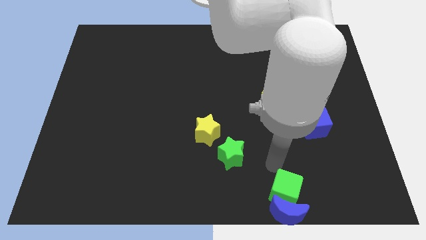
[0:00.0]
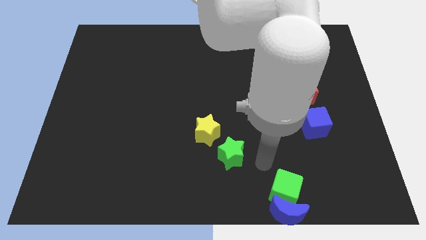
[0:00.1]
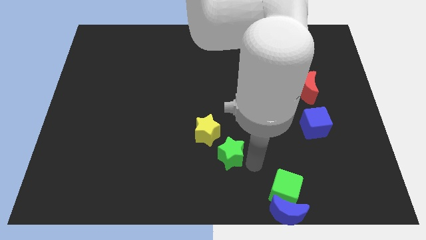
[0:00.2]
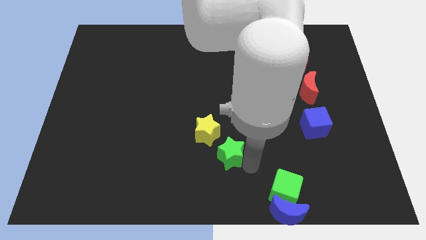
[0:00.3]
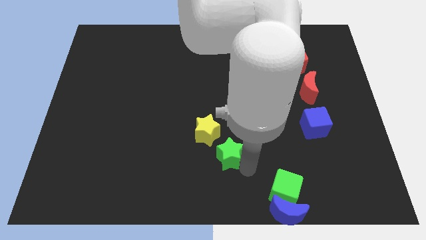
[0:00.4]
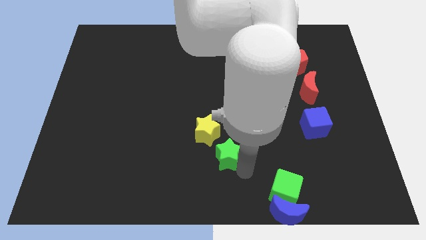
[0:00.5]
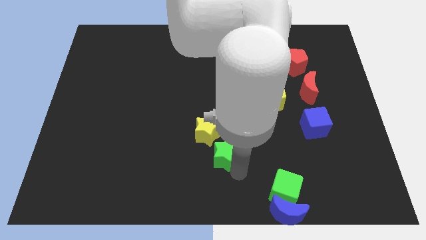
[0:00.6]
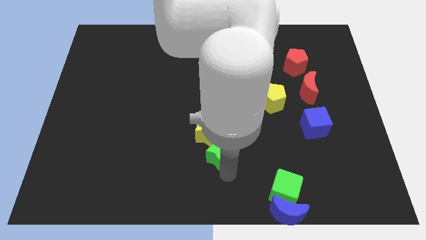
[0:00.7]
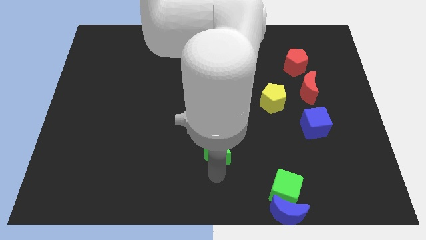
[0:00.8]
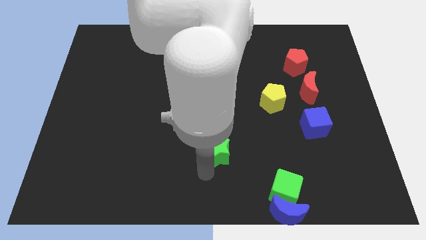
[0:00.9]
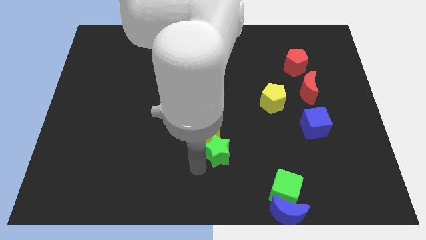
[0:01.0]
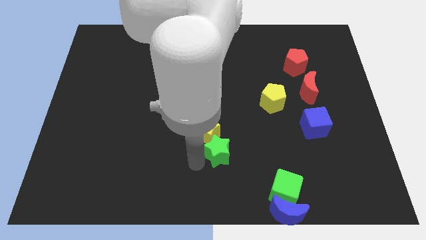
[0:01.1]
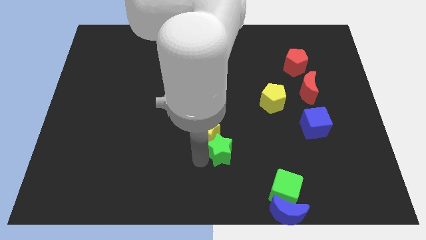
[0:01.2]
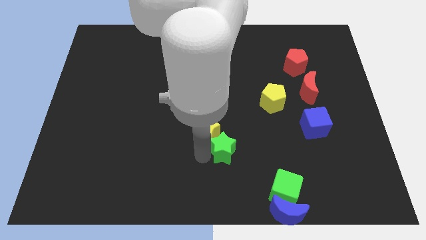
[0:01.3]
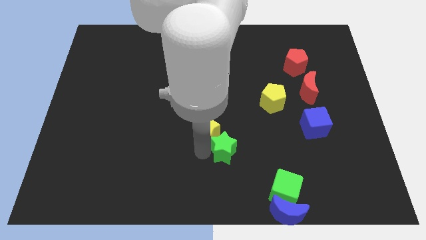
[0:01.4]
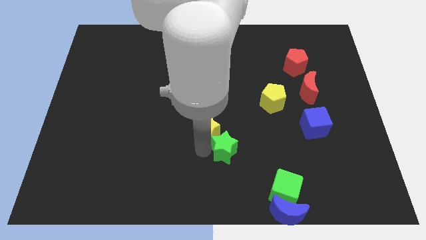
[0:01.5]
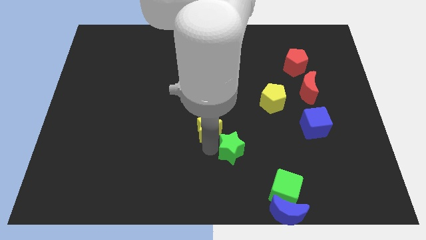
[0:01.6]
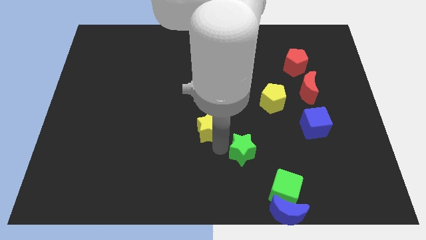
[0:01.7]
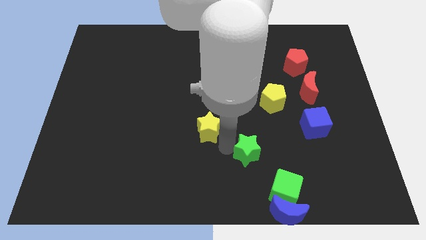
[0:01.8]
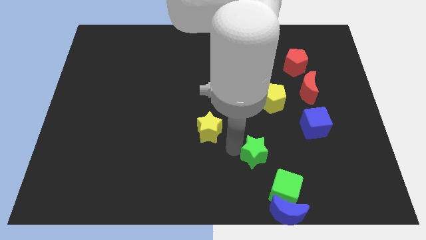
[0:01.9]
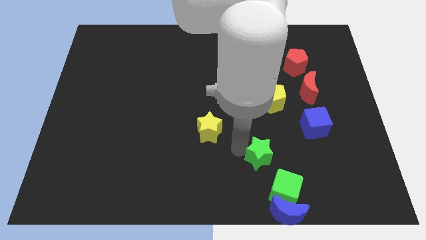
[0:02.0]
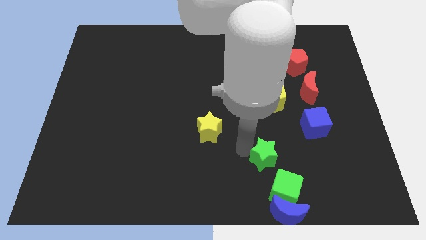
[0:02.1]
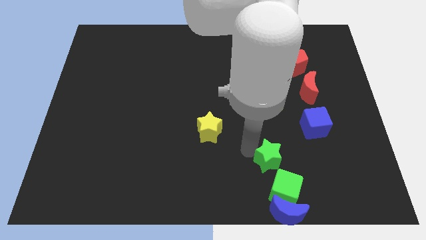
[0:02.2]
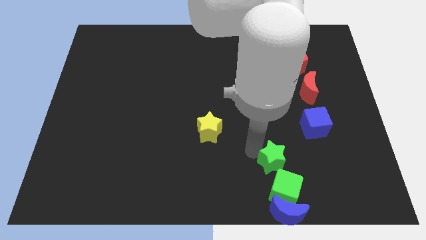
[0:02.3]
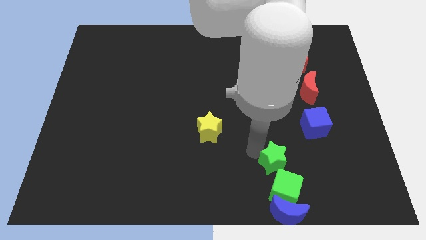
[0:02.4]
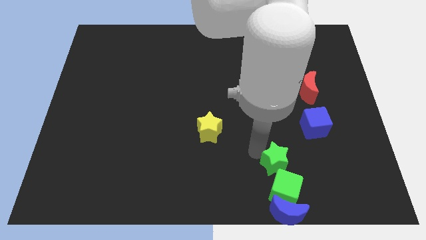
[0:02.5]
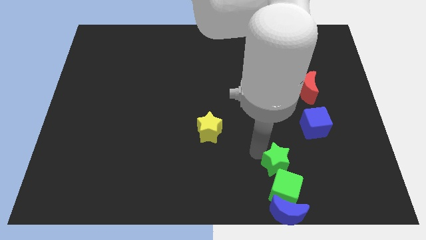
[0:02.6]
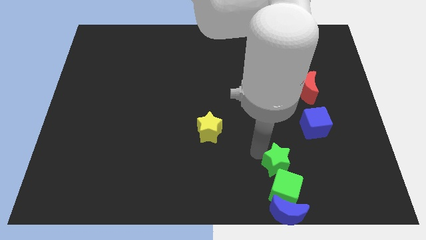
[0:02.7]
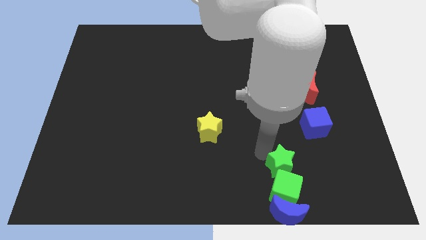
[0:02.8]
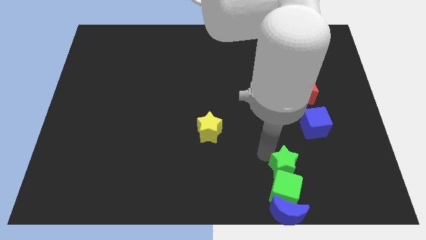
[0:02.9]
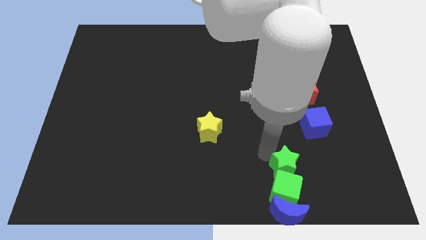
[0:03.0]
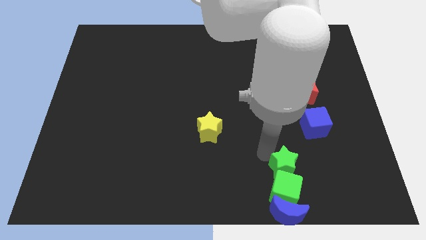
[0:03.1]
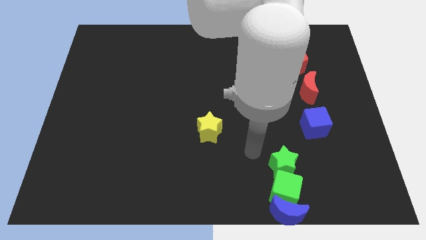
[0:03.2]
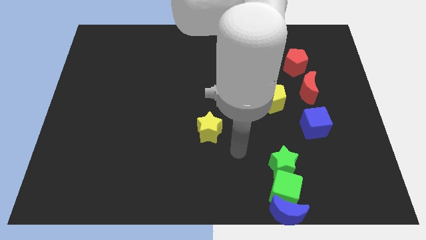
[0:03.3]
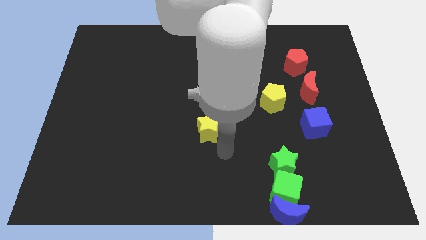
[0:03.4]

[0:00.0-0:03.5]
put the green star to the top side of the green cube

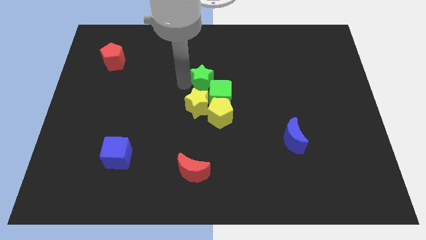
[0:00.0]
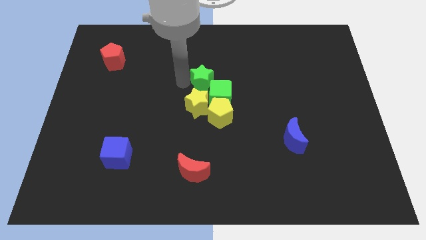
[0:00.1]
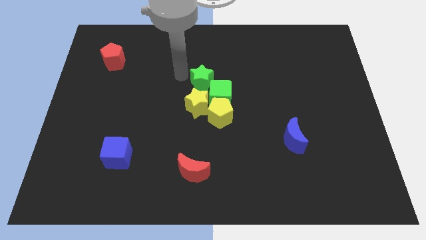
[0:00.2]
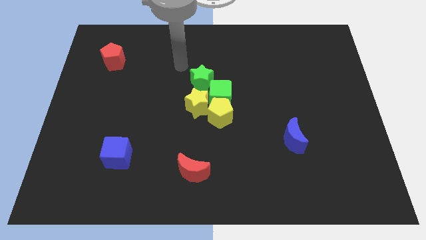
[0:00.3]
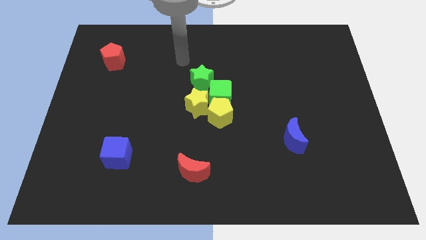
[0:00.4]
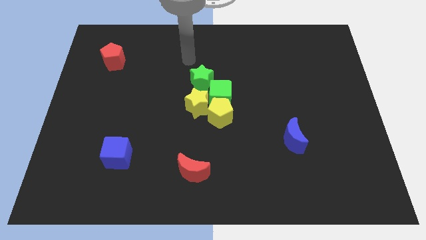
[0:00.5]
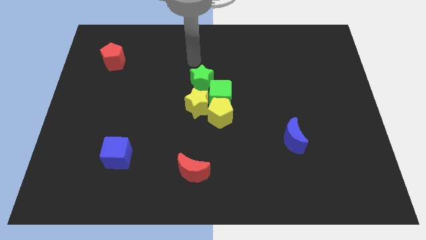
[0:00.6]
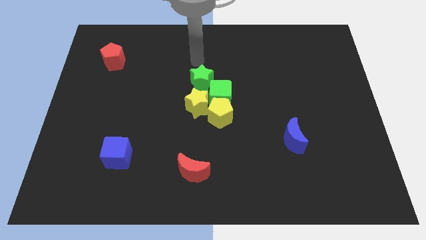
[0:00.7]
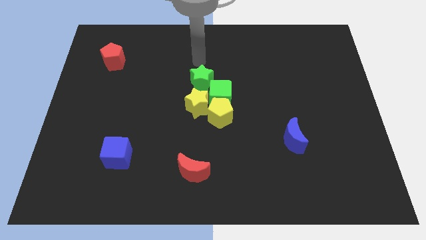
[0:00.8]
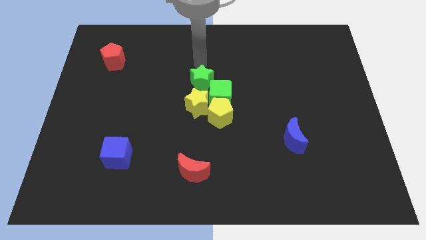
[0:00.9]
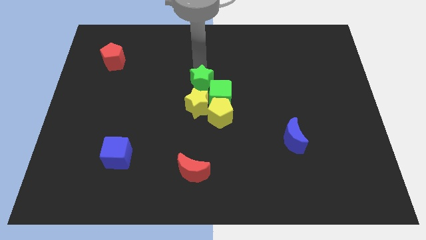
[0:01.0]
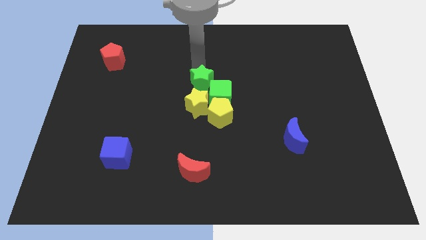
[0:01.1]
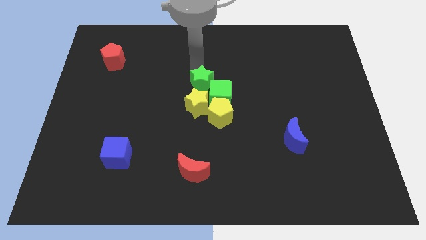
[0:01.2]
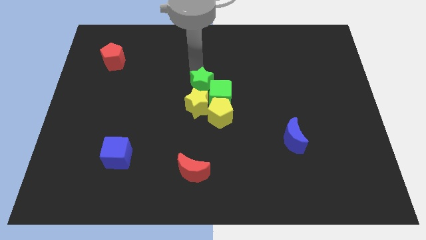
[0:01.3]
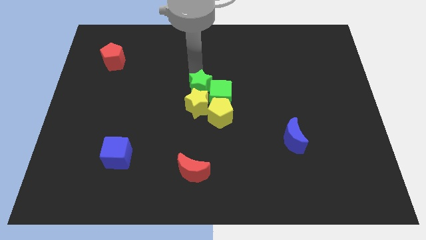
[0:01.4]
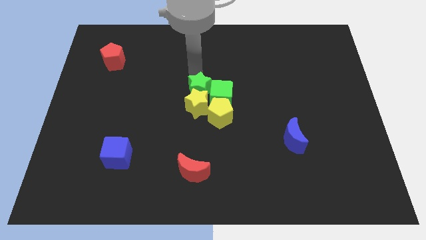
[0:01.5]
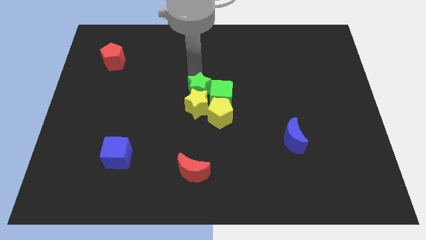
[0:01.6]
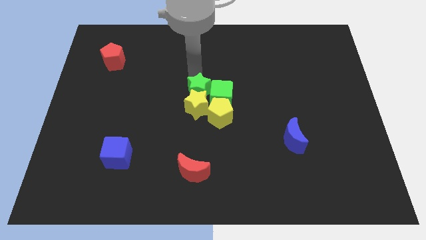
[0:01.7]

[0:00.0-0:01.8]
push the green star into the yellow star

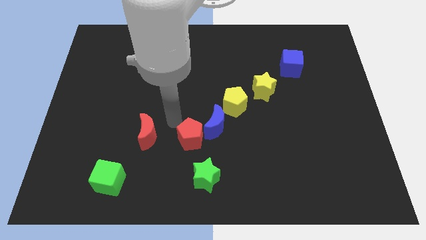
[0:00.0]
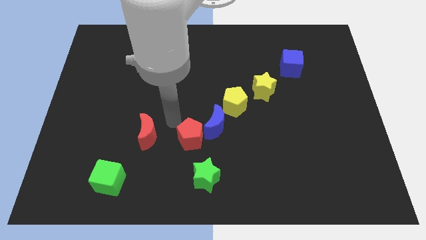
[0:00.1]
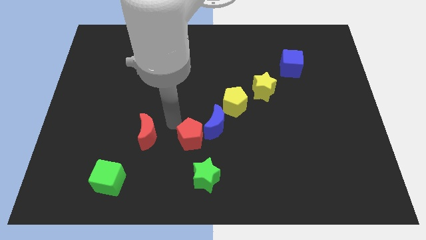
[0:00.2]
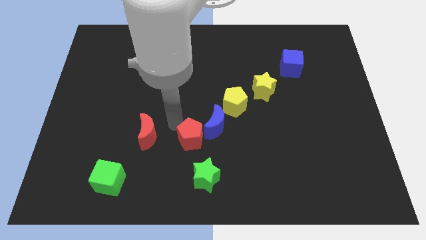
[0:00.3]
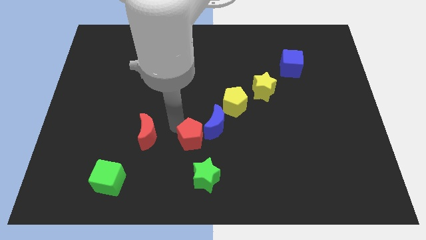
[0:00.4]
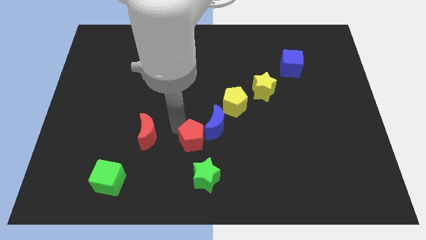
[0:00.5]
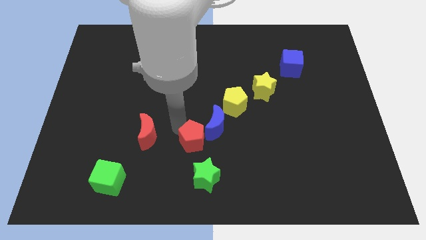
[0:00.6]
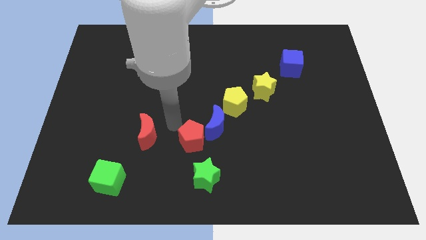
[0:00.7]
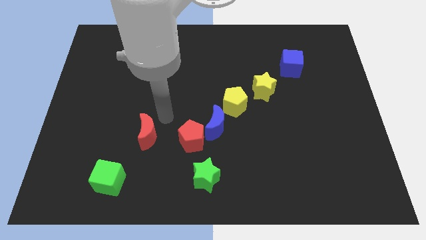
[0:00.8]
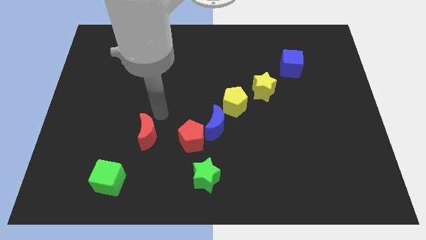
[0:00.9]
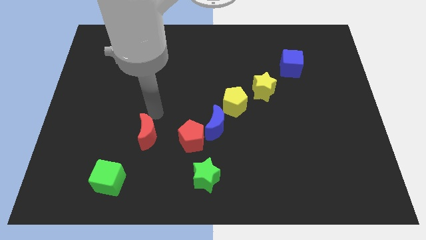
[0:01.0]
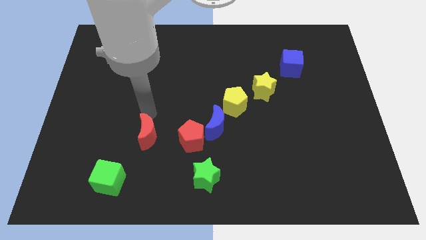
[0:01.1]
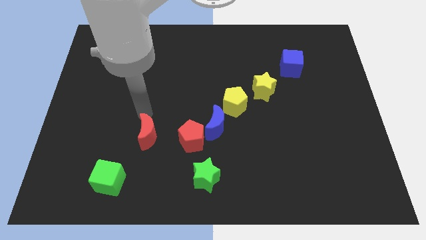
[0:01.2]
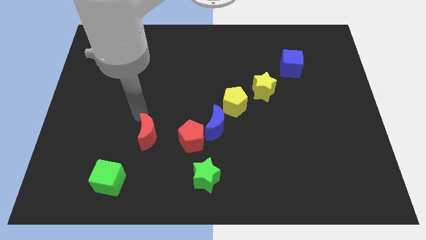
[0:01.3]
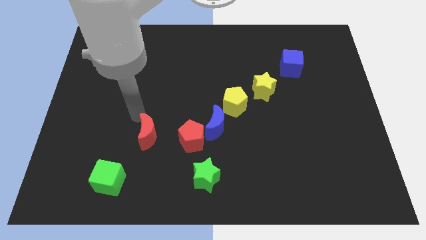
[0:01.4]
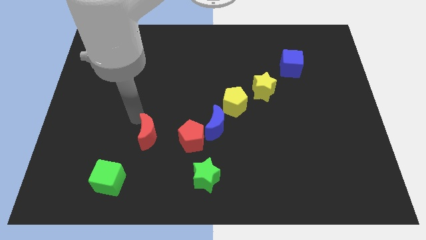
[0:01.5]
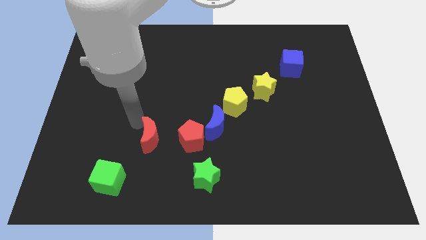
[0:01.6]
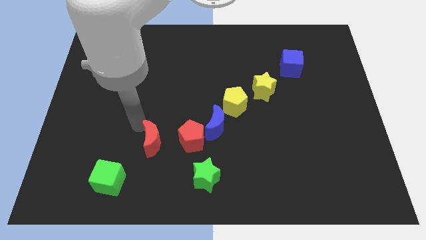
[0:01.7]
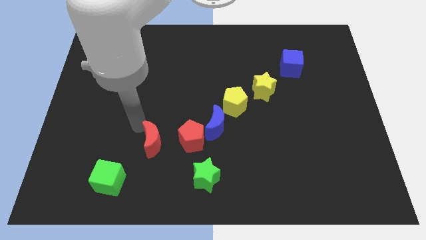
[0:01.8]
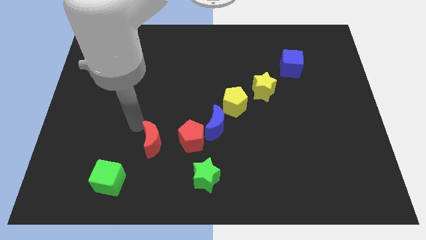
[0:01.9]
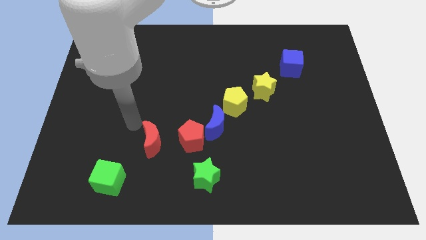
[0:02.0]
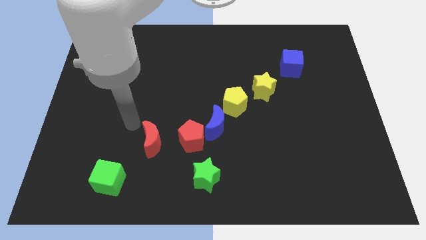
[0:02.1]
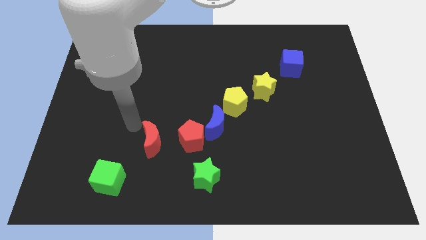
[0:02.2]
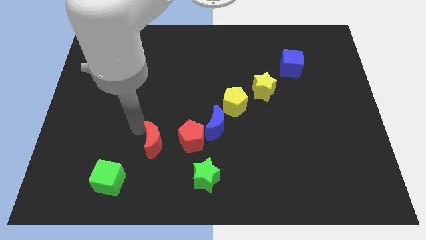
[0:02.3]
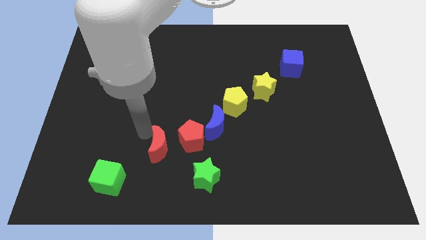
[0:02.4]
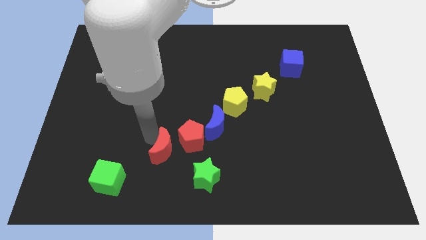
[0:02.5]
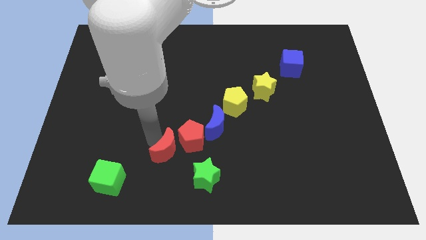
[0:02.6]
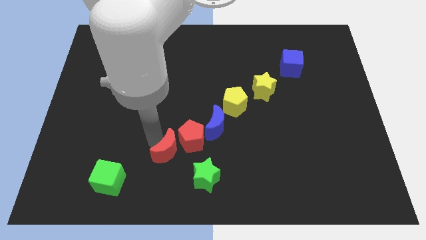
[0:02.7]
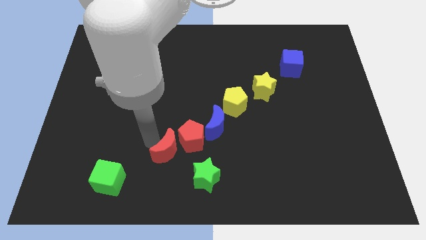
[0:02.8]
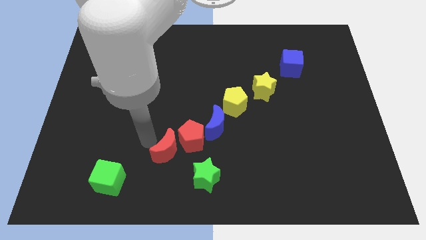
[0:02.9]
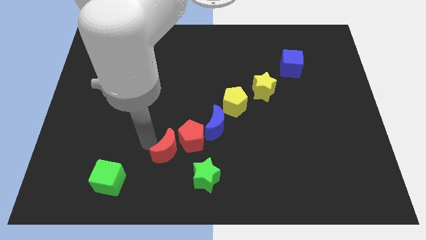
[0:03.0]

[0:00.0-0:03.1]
push the red moon close to the red pentagon

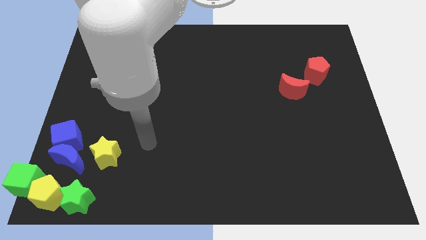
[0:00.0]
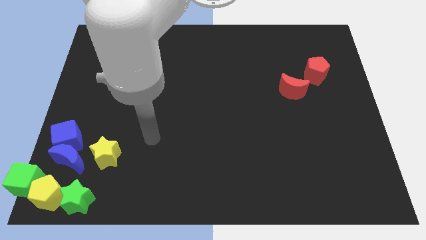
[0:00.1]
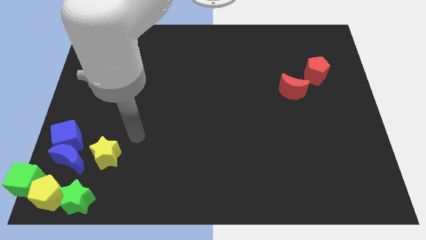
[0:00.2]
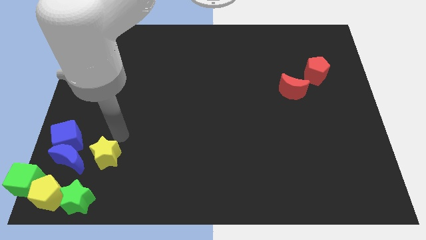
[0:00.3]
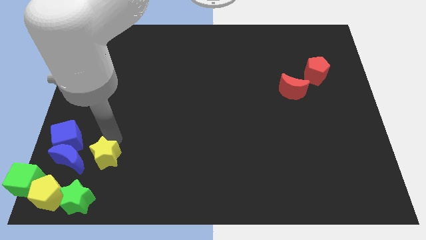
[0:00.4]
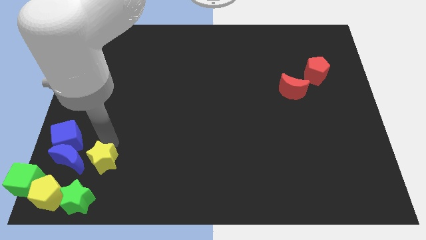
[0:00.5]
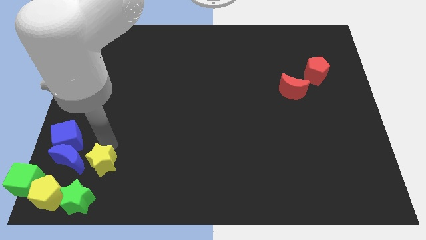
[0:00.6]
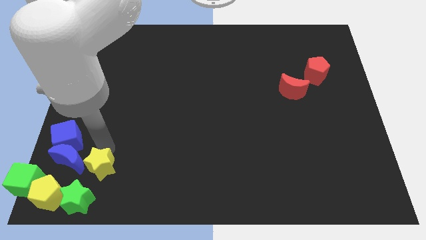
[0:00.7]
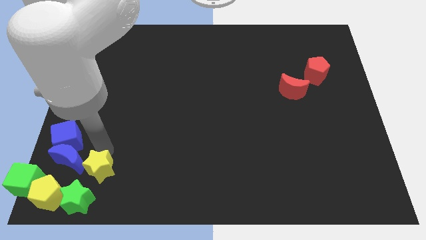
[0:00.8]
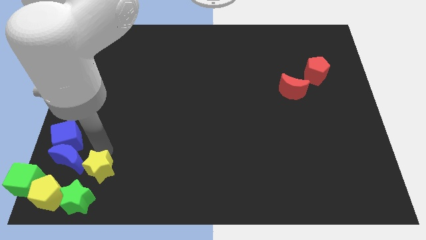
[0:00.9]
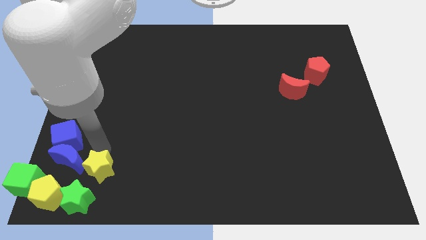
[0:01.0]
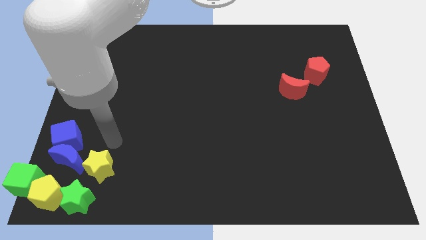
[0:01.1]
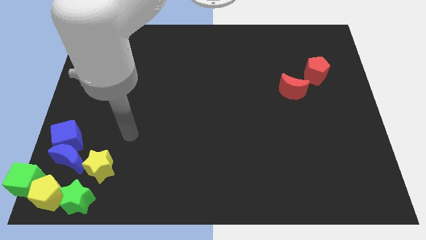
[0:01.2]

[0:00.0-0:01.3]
place the yellow star to the right side of blue moon
